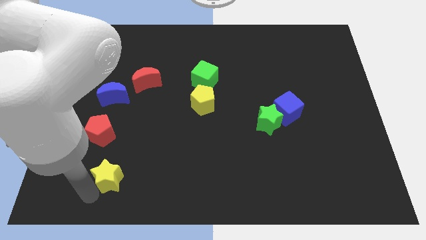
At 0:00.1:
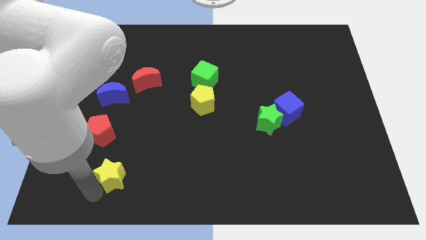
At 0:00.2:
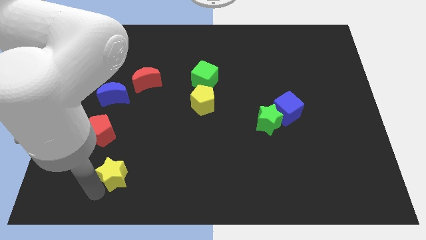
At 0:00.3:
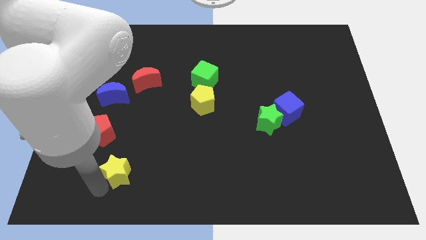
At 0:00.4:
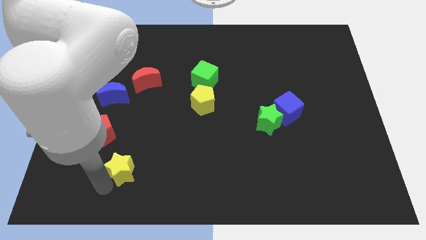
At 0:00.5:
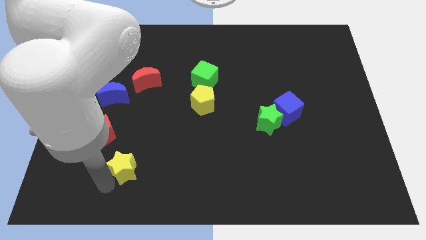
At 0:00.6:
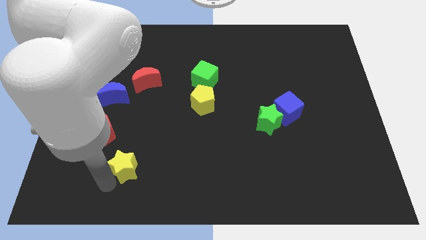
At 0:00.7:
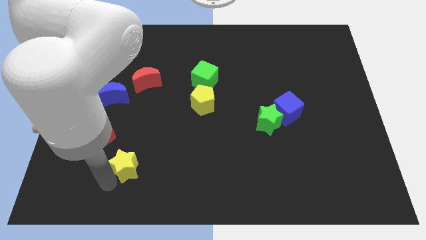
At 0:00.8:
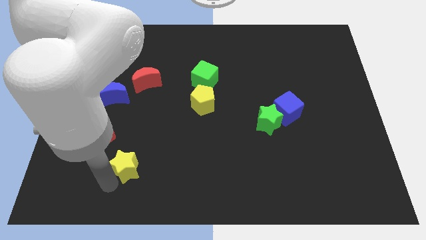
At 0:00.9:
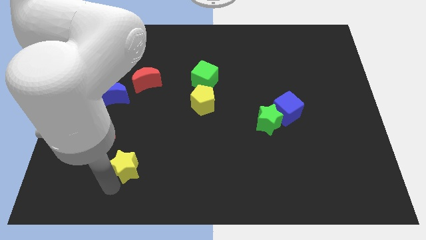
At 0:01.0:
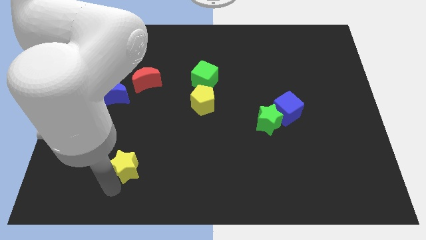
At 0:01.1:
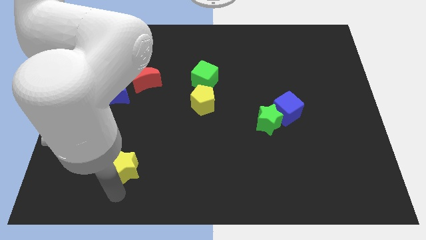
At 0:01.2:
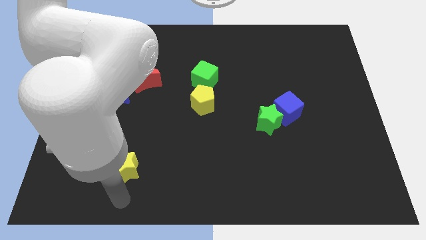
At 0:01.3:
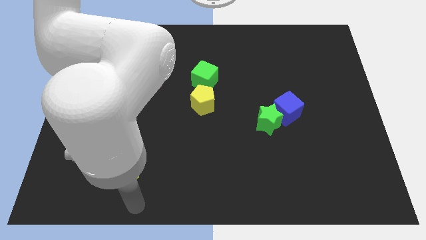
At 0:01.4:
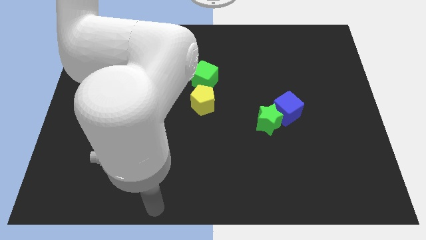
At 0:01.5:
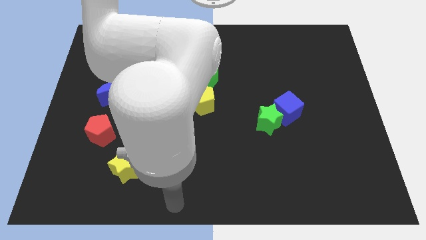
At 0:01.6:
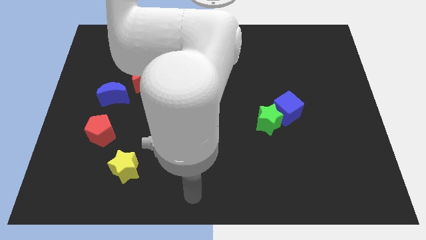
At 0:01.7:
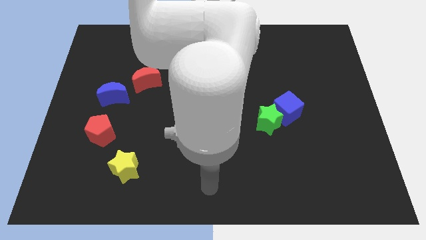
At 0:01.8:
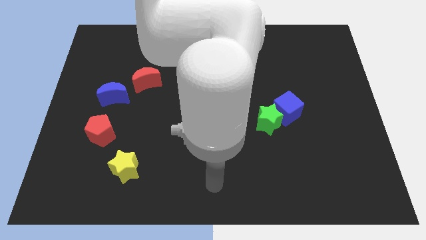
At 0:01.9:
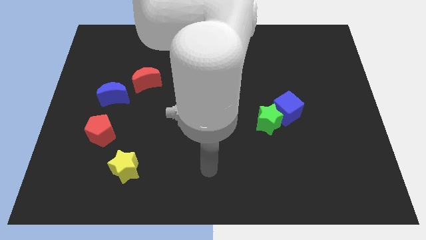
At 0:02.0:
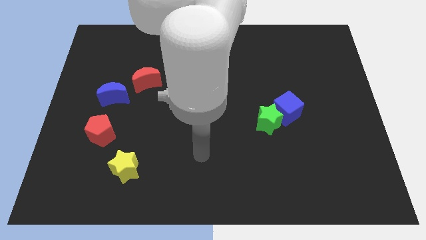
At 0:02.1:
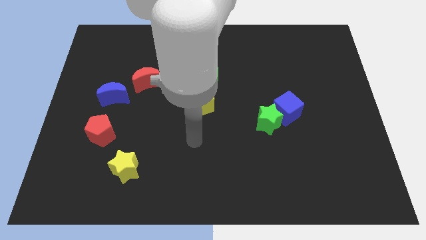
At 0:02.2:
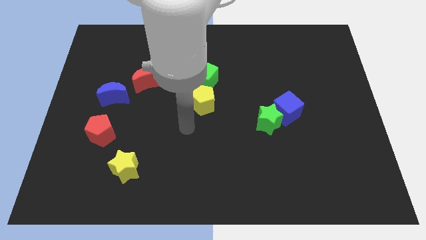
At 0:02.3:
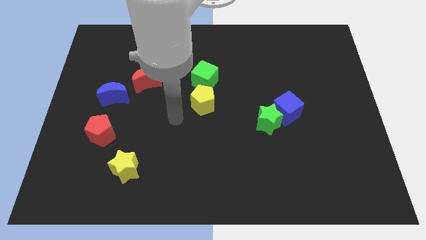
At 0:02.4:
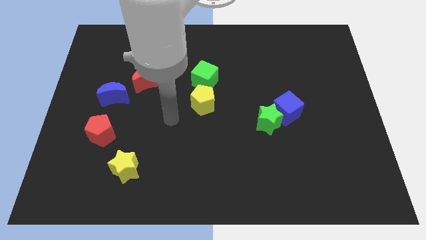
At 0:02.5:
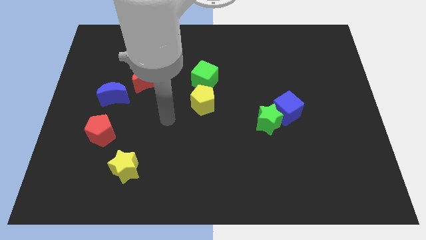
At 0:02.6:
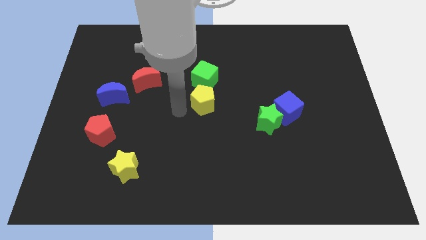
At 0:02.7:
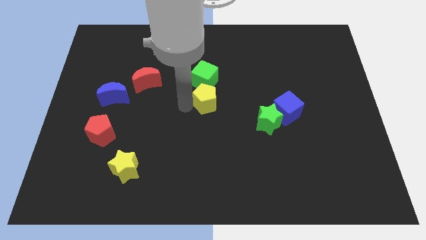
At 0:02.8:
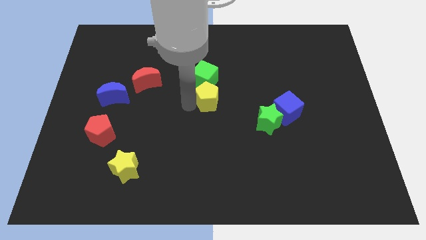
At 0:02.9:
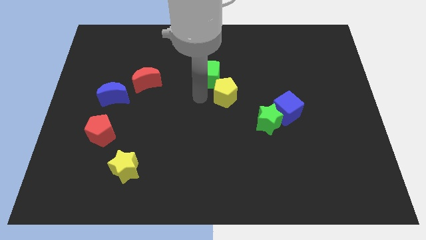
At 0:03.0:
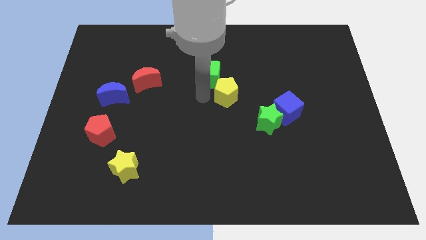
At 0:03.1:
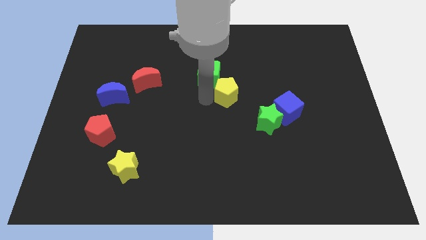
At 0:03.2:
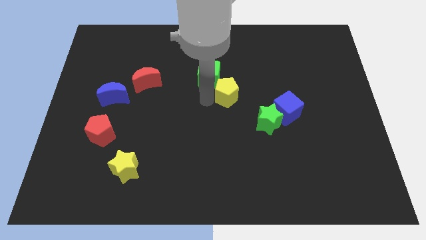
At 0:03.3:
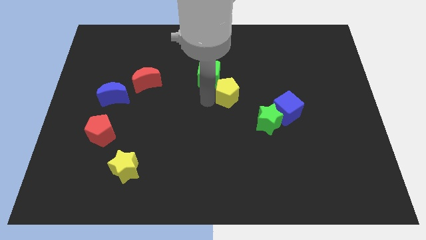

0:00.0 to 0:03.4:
move the yellow pentagon to the bottom right of green cube

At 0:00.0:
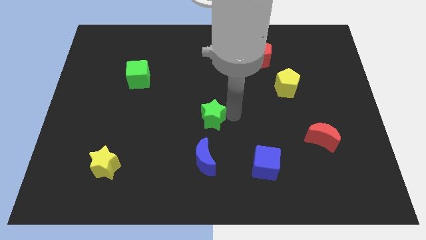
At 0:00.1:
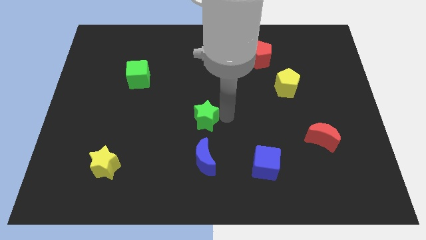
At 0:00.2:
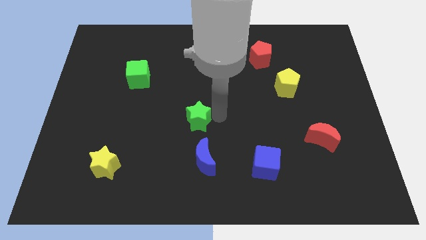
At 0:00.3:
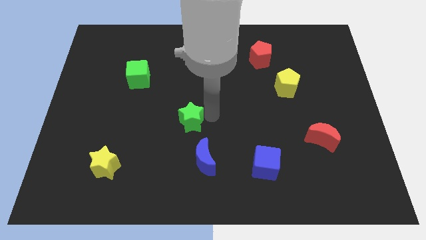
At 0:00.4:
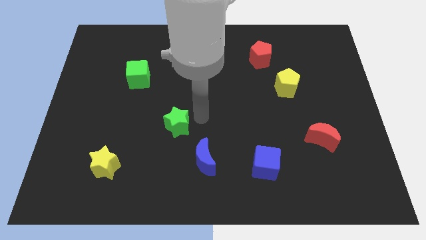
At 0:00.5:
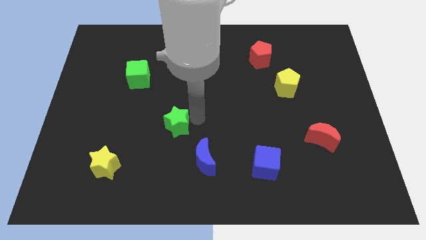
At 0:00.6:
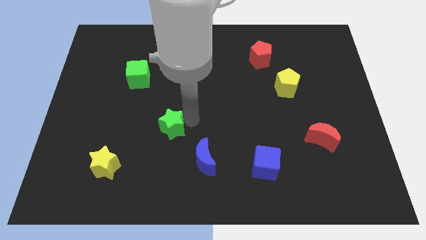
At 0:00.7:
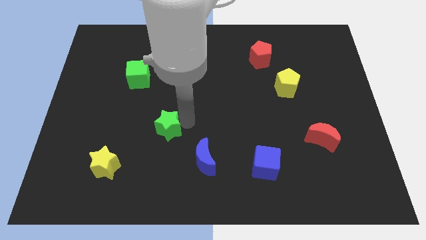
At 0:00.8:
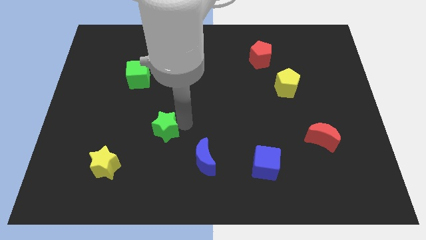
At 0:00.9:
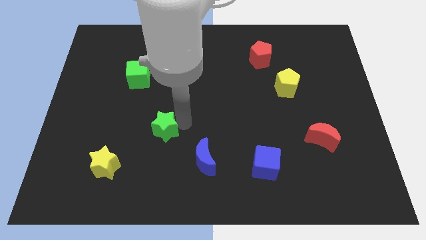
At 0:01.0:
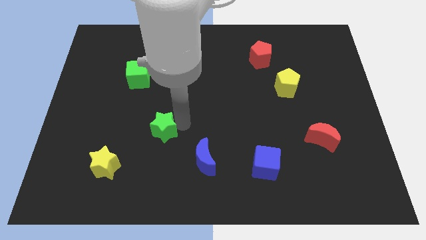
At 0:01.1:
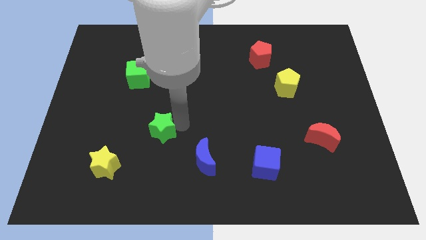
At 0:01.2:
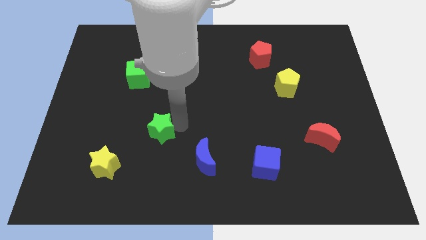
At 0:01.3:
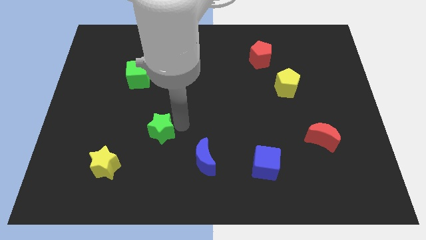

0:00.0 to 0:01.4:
move green star towards yellow star

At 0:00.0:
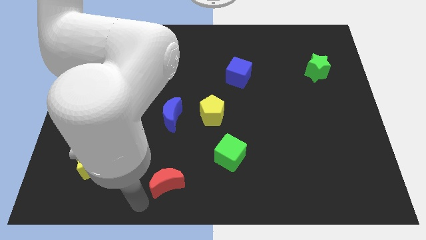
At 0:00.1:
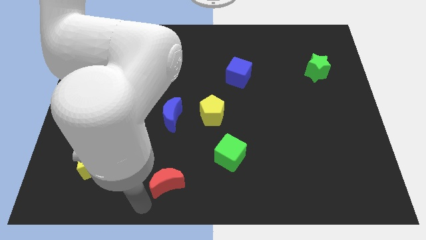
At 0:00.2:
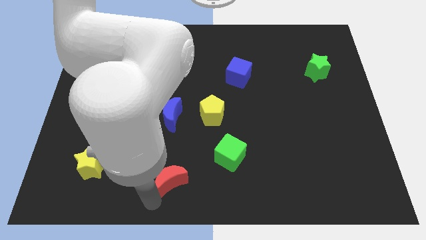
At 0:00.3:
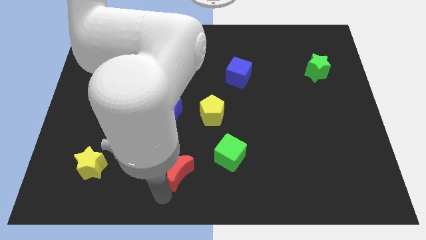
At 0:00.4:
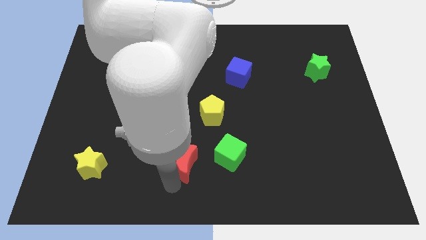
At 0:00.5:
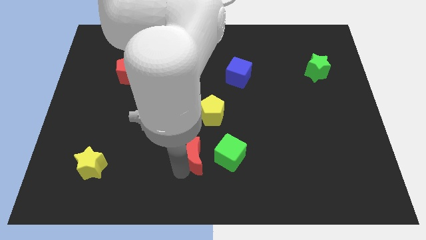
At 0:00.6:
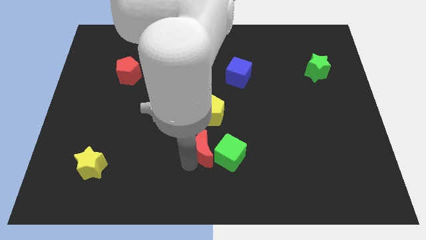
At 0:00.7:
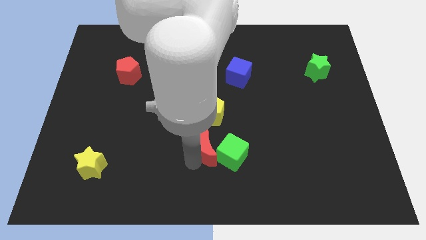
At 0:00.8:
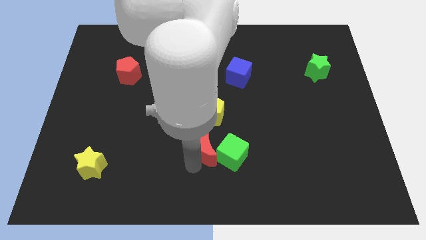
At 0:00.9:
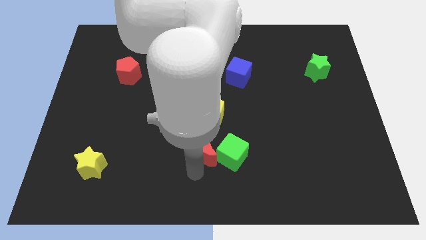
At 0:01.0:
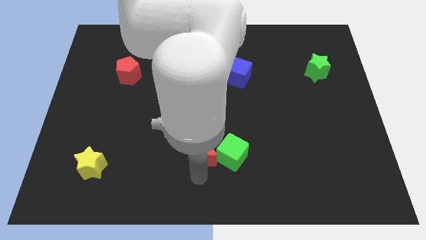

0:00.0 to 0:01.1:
push the red crescent close to the green cube

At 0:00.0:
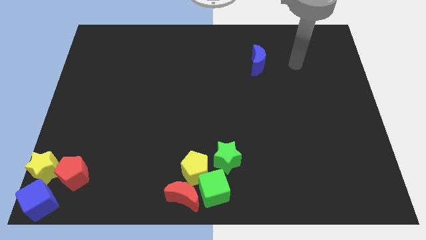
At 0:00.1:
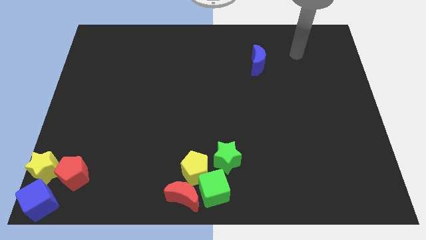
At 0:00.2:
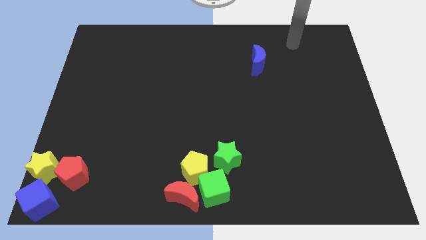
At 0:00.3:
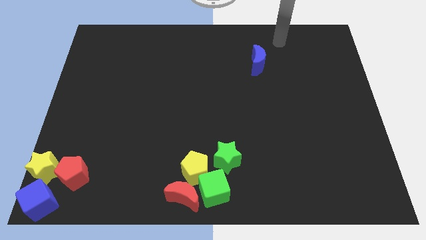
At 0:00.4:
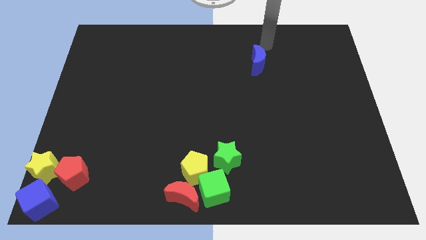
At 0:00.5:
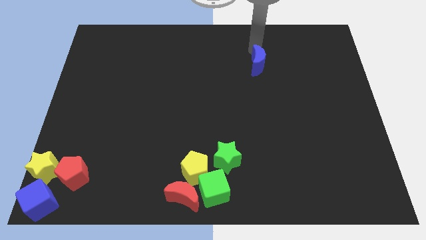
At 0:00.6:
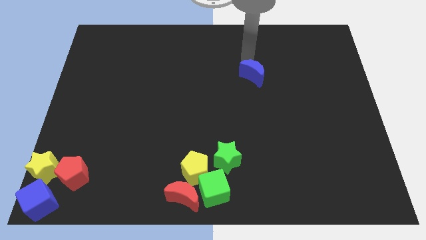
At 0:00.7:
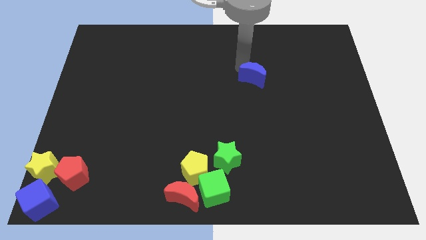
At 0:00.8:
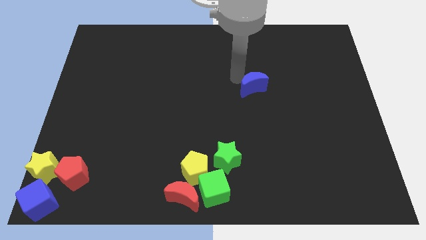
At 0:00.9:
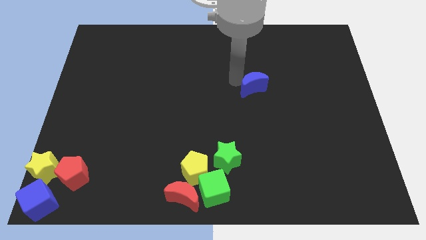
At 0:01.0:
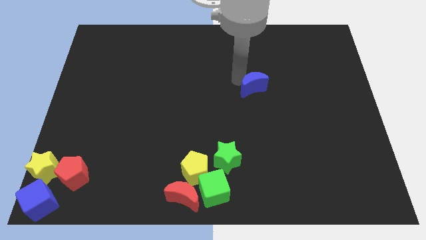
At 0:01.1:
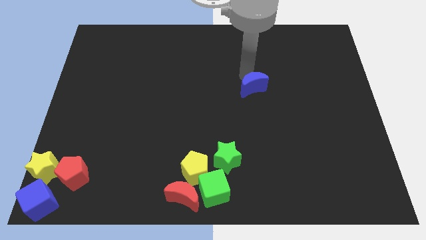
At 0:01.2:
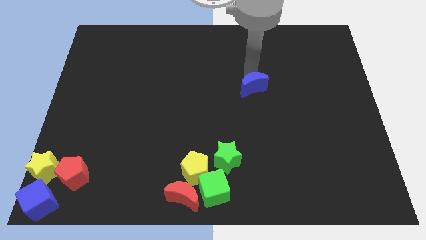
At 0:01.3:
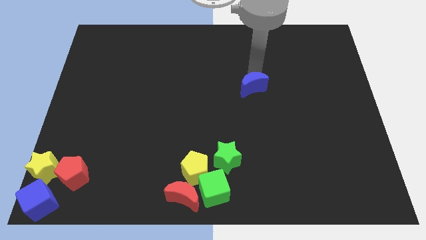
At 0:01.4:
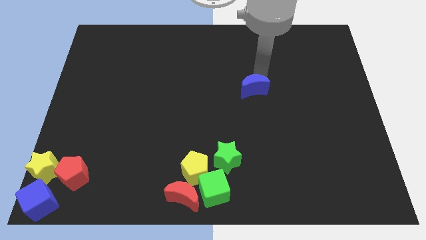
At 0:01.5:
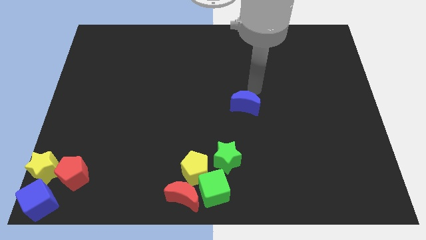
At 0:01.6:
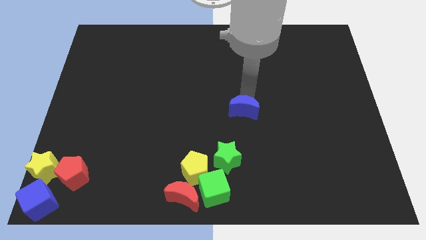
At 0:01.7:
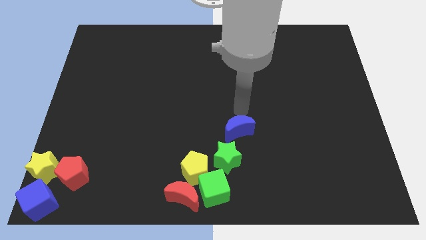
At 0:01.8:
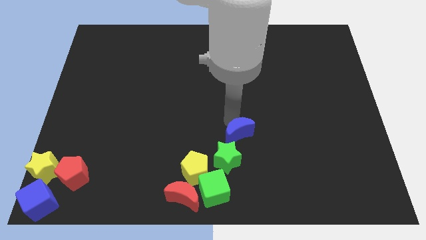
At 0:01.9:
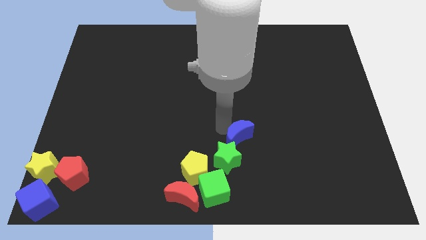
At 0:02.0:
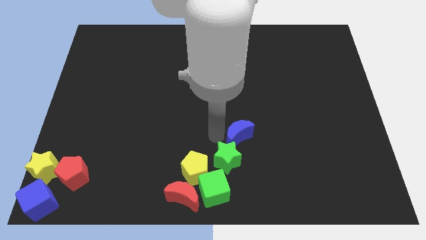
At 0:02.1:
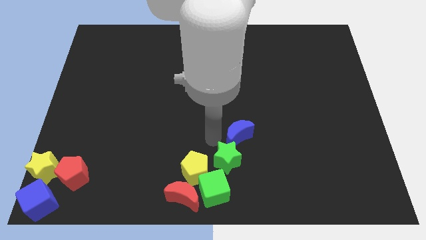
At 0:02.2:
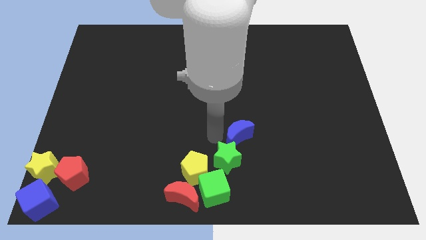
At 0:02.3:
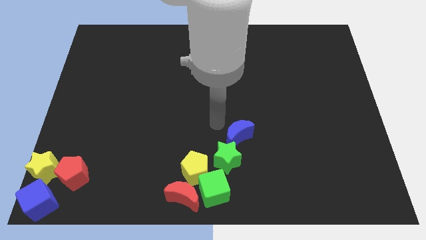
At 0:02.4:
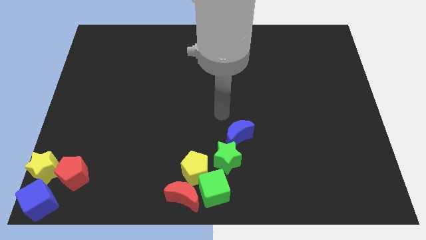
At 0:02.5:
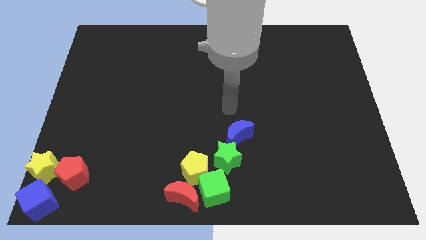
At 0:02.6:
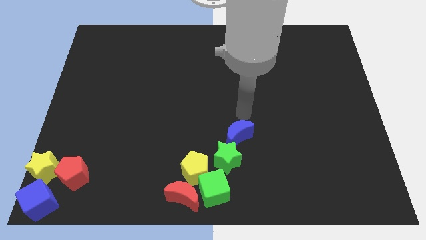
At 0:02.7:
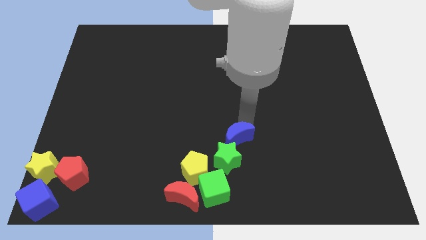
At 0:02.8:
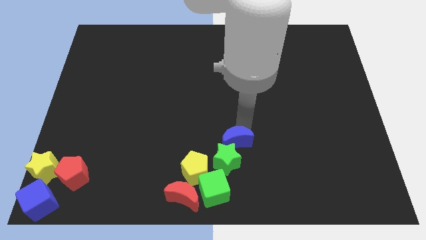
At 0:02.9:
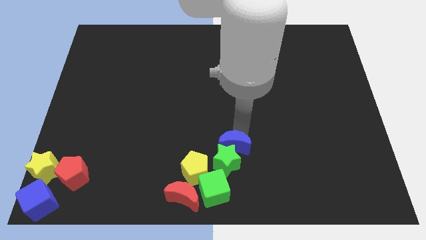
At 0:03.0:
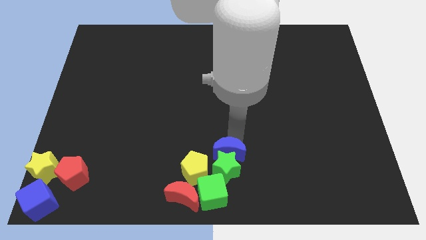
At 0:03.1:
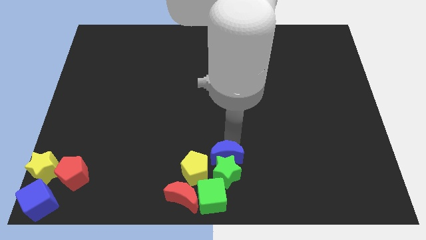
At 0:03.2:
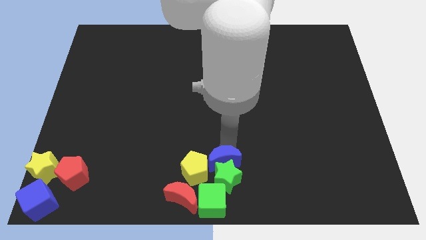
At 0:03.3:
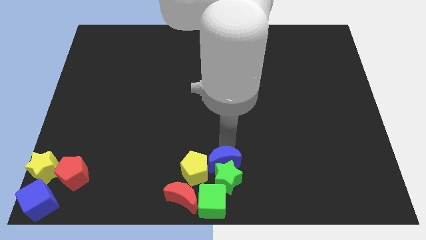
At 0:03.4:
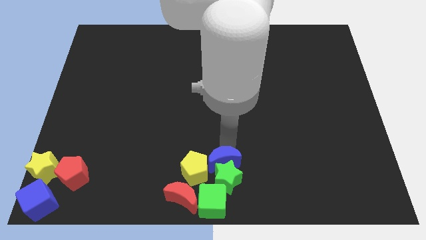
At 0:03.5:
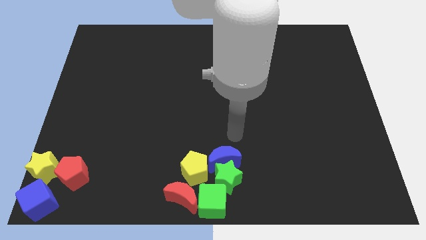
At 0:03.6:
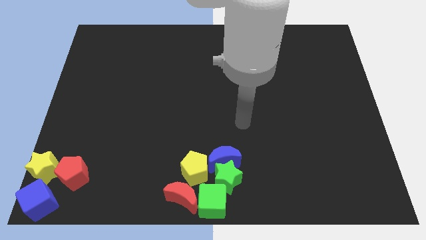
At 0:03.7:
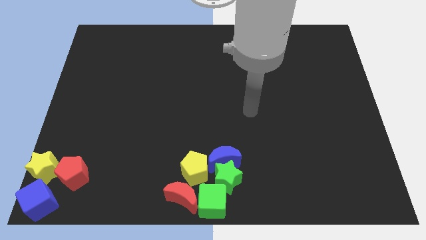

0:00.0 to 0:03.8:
push the blue moon into green star
